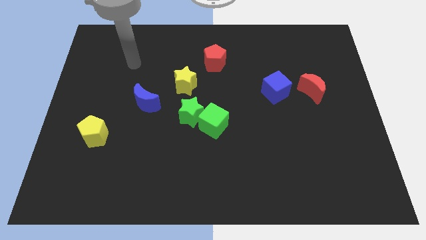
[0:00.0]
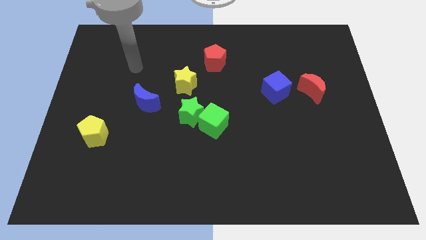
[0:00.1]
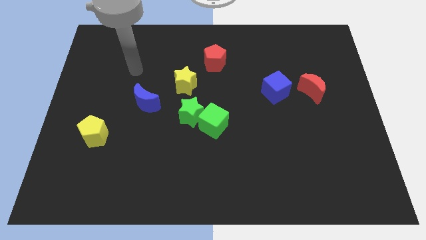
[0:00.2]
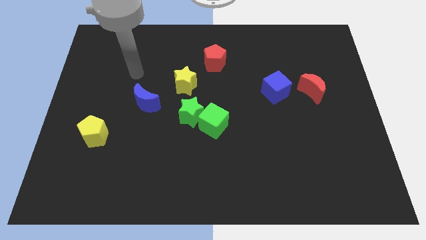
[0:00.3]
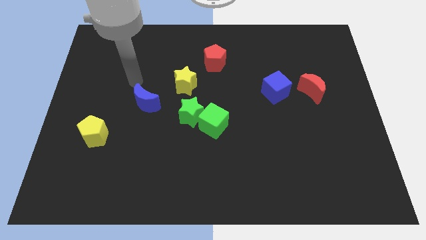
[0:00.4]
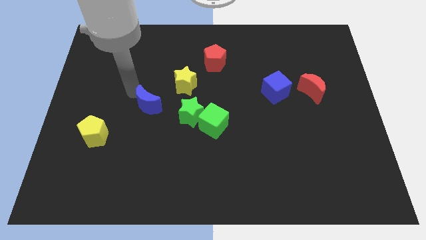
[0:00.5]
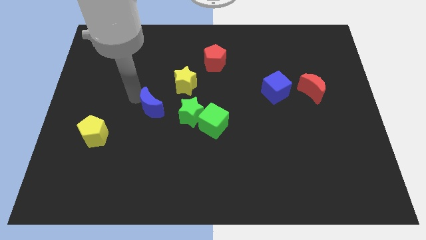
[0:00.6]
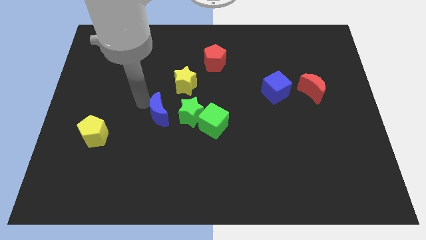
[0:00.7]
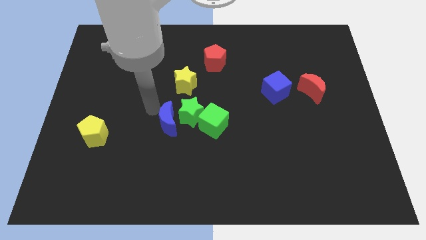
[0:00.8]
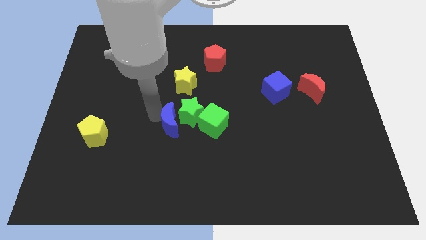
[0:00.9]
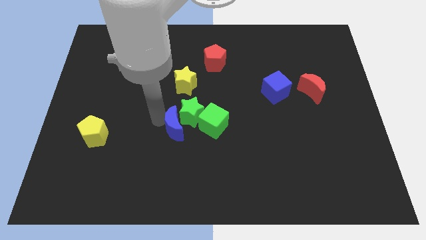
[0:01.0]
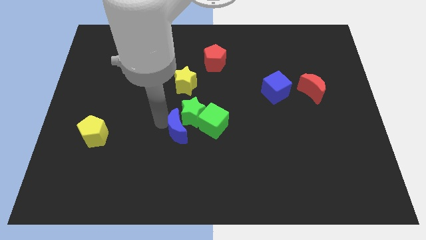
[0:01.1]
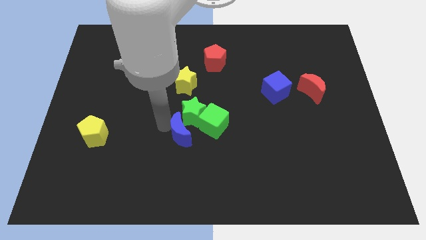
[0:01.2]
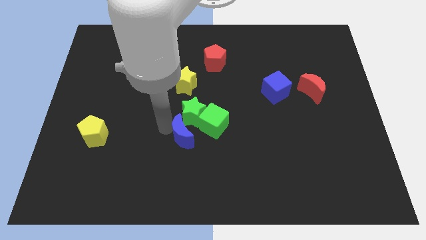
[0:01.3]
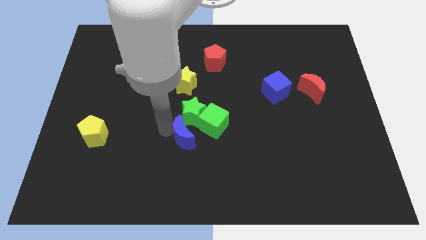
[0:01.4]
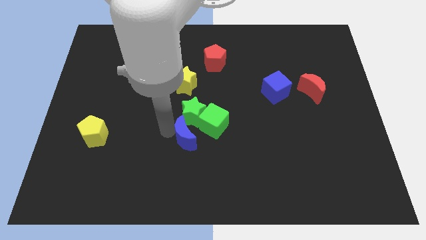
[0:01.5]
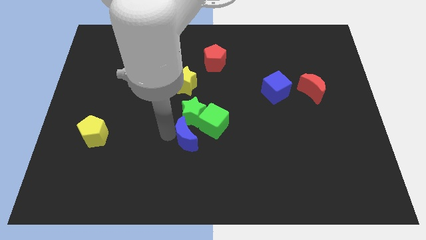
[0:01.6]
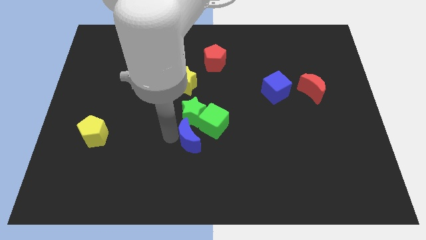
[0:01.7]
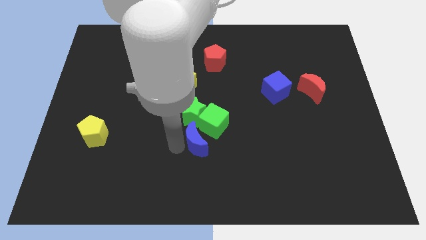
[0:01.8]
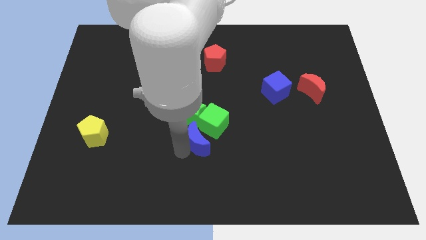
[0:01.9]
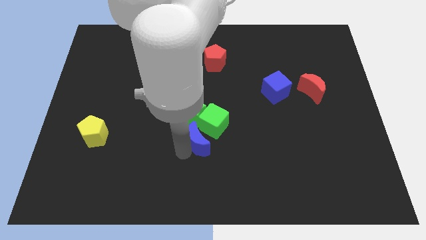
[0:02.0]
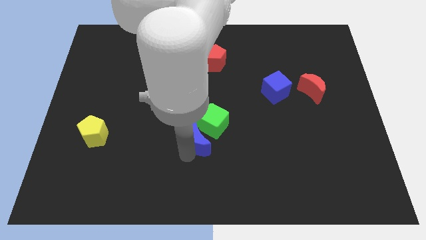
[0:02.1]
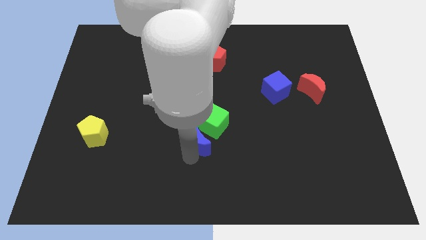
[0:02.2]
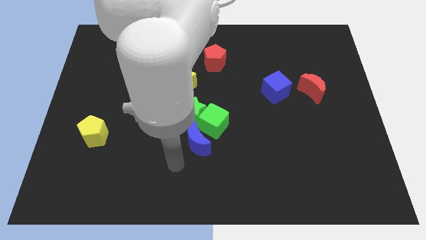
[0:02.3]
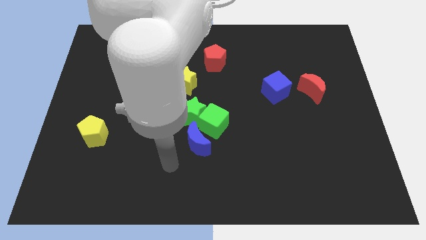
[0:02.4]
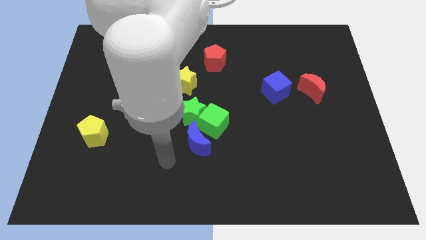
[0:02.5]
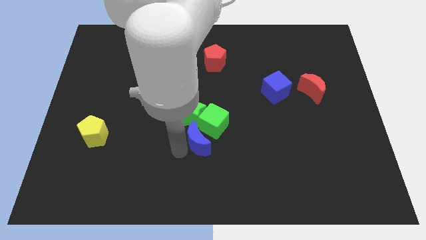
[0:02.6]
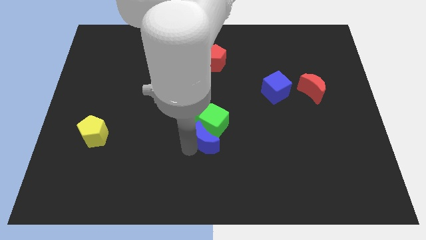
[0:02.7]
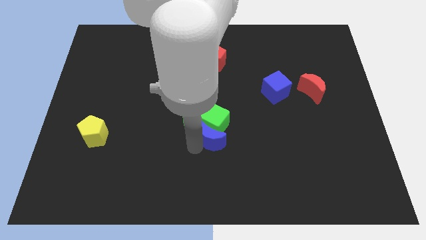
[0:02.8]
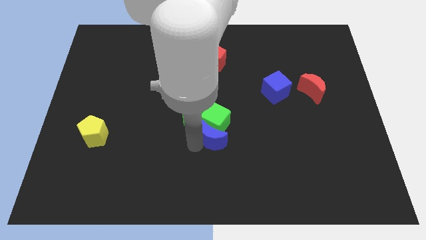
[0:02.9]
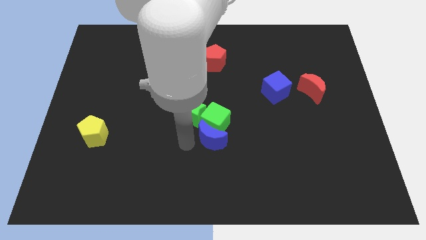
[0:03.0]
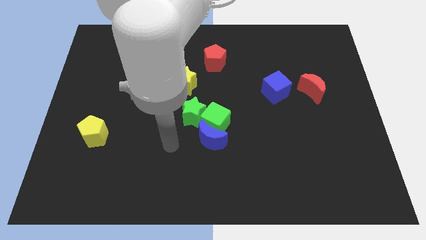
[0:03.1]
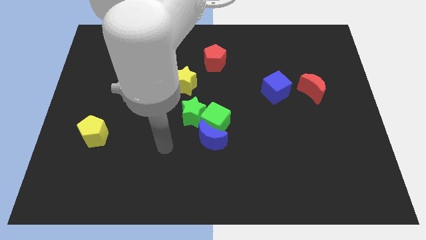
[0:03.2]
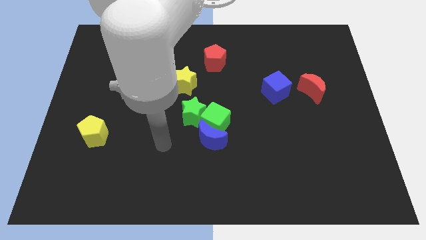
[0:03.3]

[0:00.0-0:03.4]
move the blue crescent to the bottom of the green cube

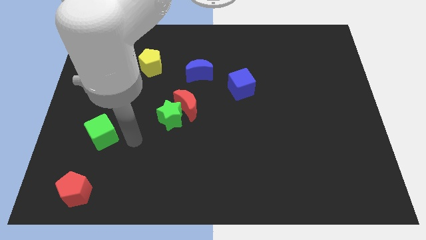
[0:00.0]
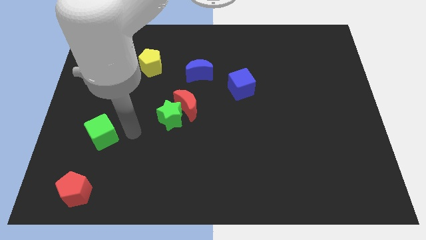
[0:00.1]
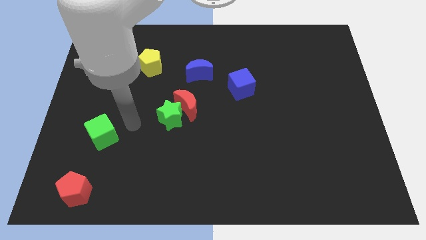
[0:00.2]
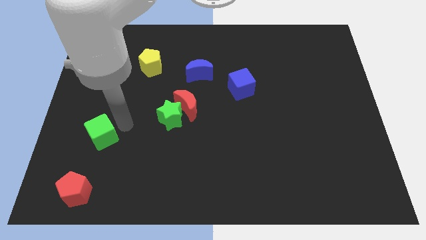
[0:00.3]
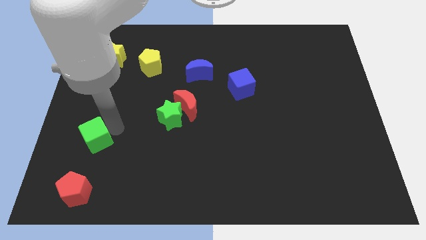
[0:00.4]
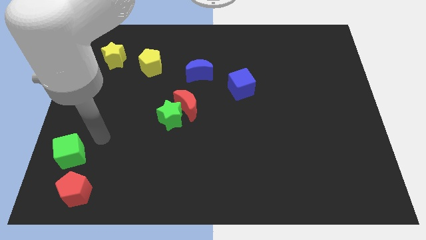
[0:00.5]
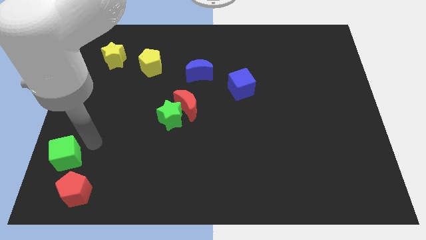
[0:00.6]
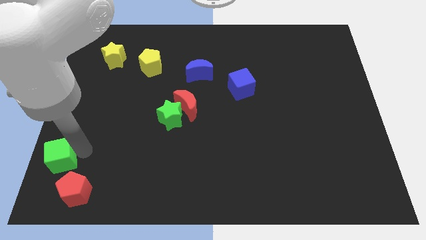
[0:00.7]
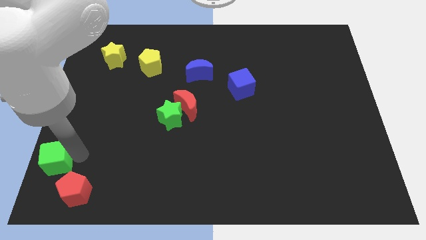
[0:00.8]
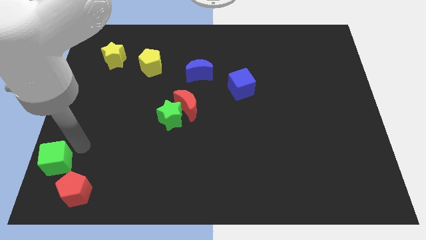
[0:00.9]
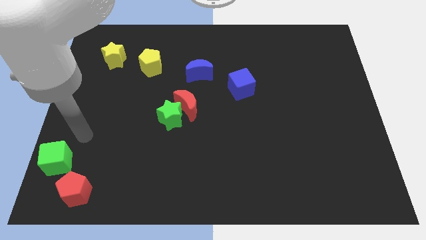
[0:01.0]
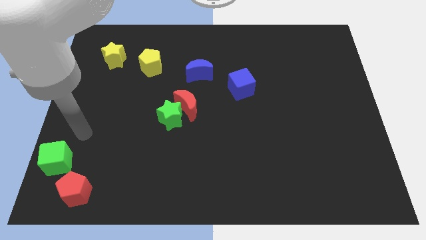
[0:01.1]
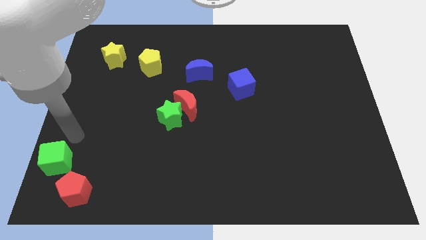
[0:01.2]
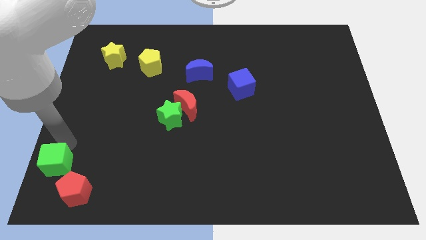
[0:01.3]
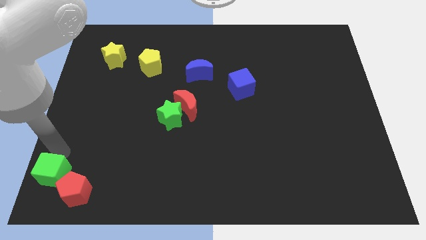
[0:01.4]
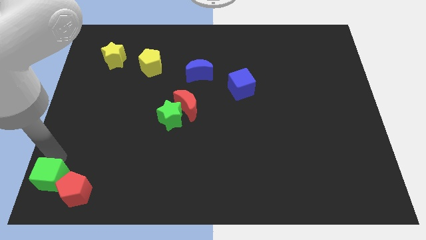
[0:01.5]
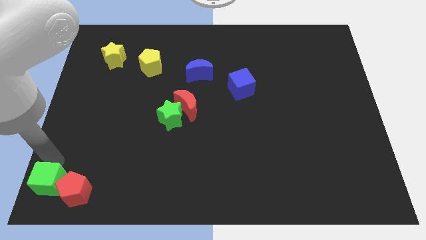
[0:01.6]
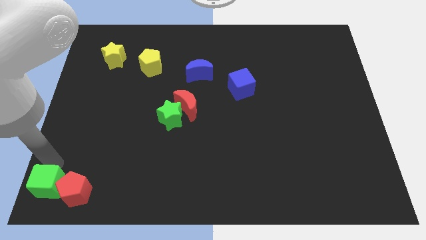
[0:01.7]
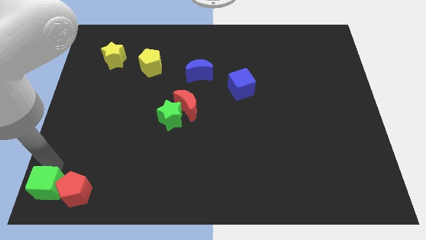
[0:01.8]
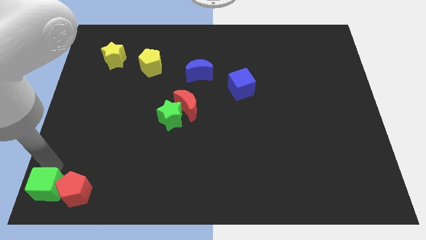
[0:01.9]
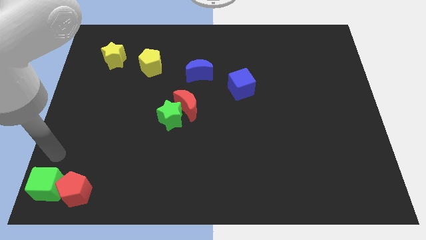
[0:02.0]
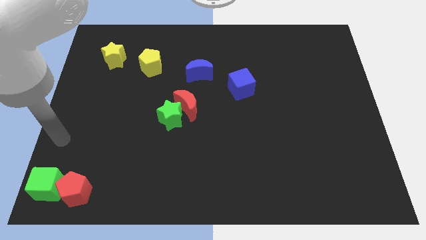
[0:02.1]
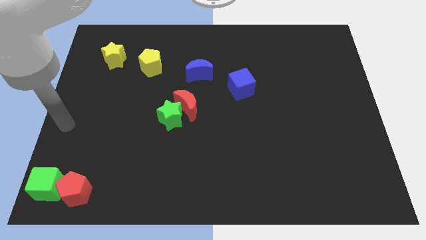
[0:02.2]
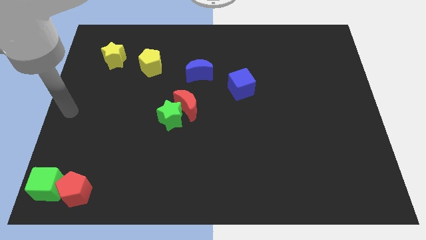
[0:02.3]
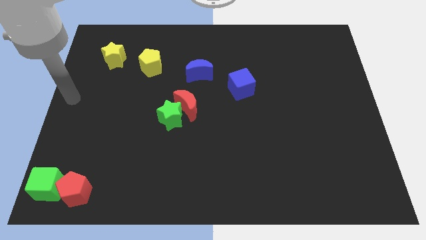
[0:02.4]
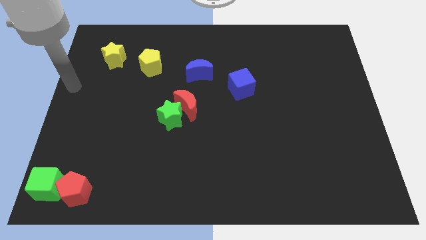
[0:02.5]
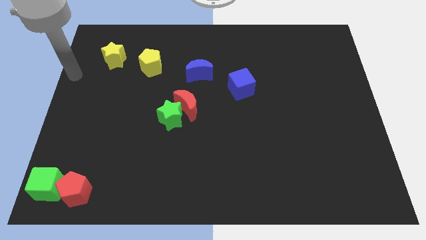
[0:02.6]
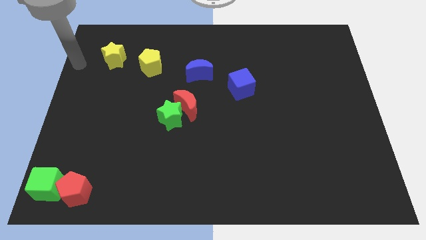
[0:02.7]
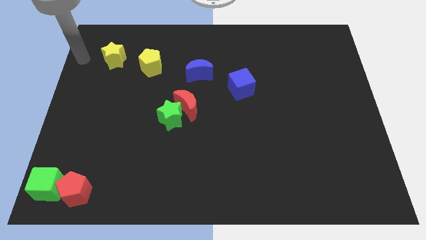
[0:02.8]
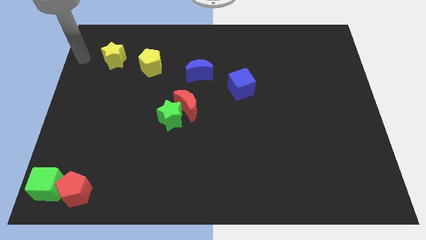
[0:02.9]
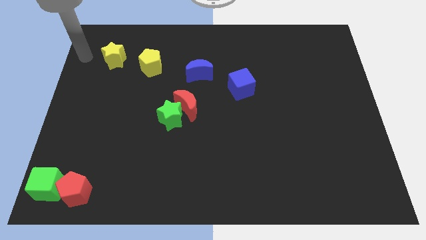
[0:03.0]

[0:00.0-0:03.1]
place green cube beside red pentagon

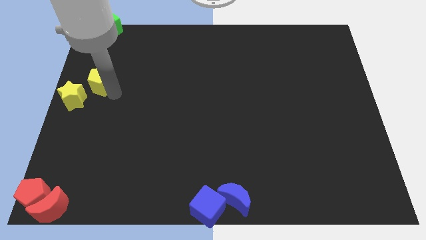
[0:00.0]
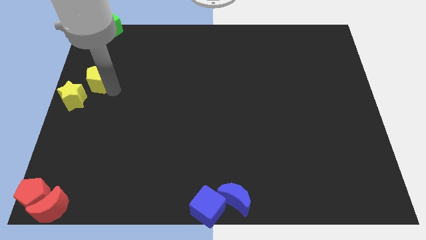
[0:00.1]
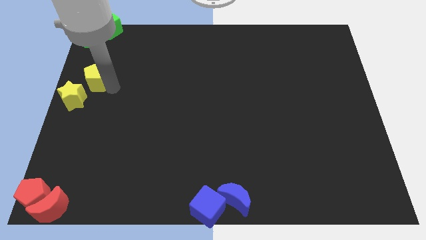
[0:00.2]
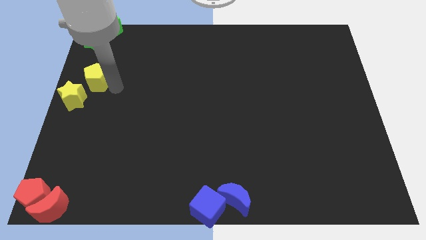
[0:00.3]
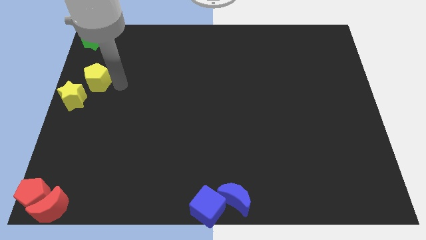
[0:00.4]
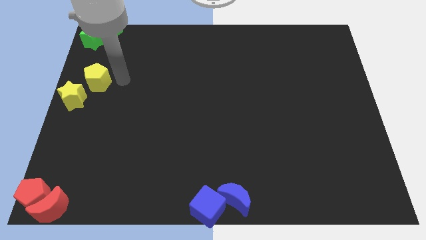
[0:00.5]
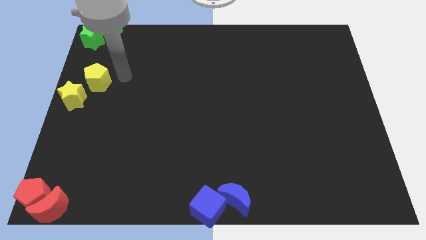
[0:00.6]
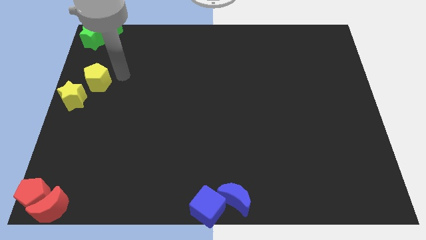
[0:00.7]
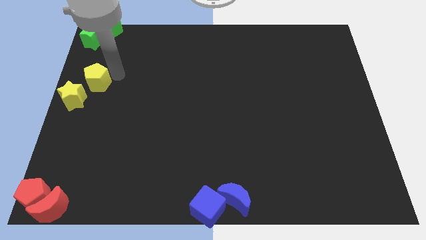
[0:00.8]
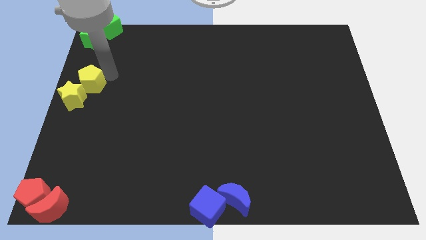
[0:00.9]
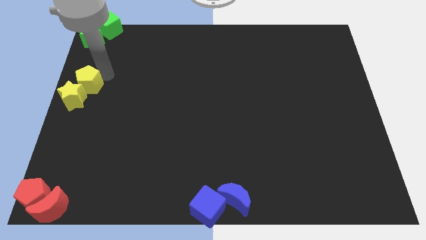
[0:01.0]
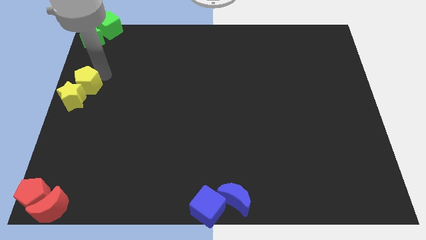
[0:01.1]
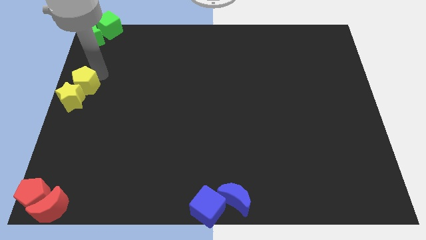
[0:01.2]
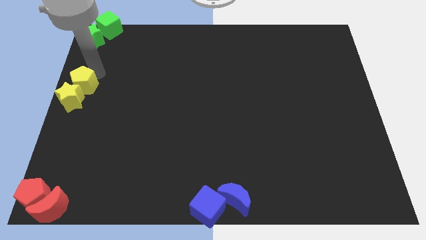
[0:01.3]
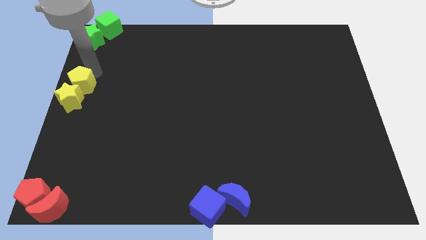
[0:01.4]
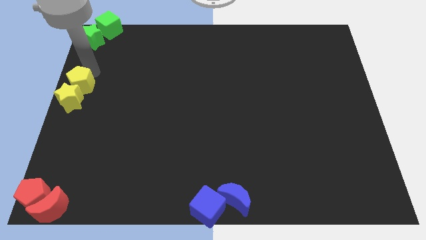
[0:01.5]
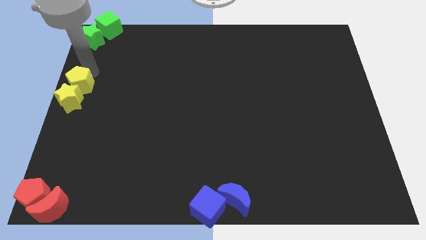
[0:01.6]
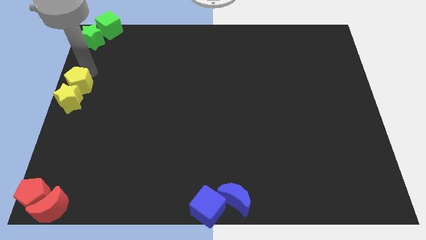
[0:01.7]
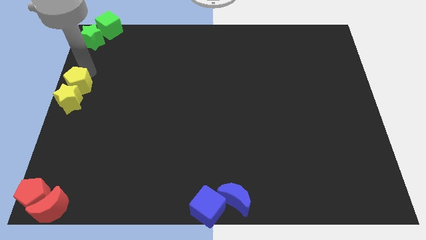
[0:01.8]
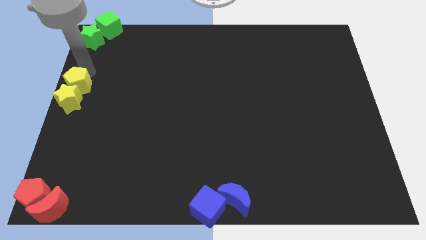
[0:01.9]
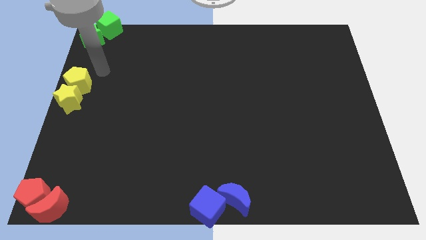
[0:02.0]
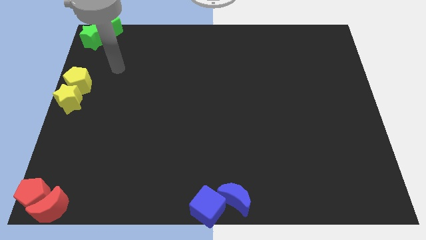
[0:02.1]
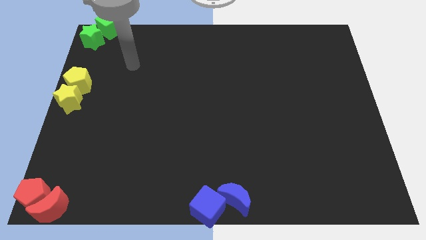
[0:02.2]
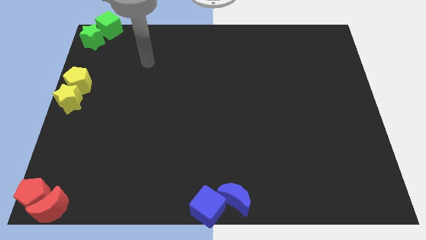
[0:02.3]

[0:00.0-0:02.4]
put the yellow pentagon into the yellow star

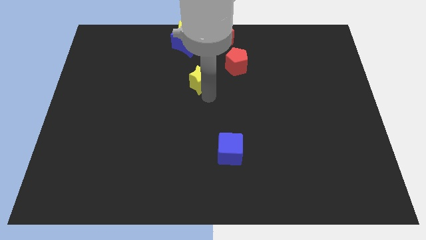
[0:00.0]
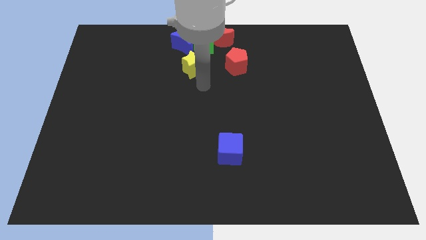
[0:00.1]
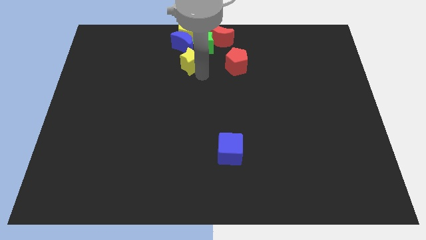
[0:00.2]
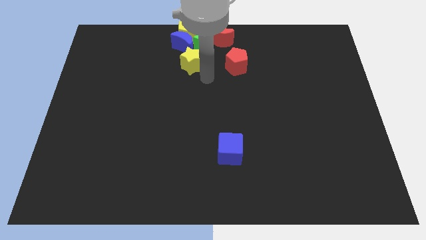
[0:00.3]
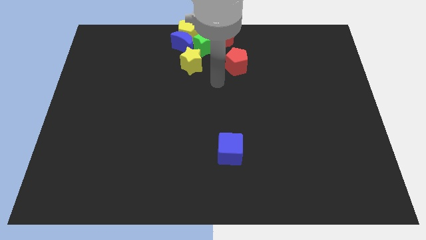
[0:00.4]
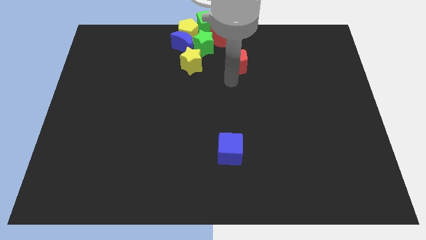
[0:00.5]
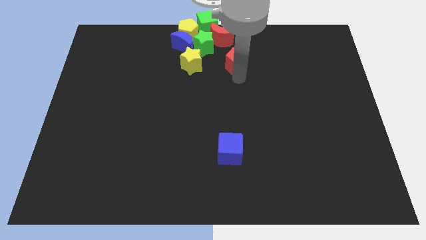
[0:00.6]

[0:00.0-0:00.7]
push the yellow star towards the group of blocks
